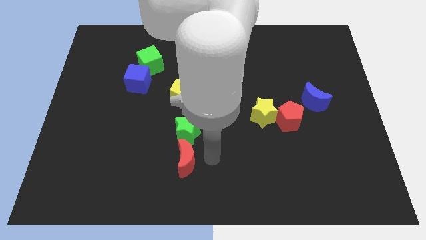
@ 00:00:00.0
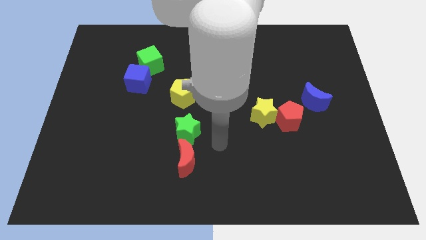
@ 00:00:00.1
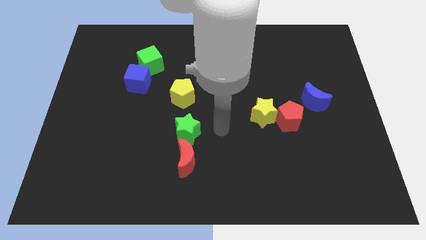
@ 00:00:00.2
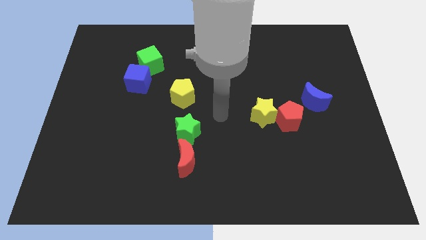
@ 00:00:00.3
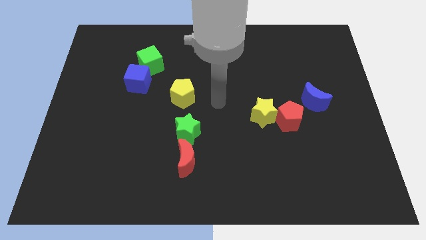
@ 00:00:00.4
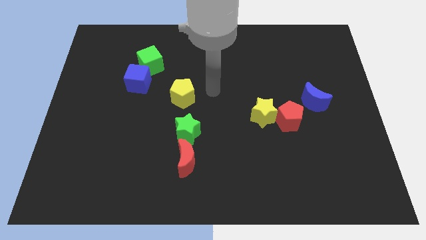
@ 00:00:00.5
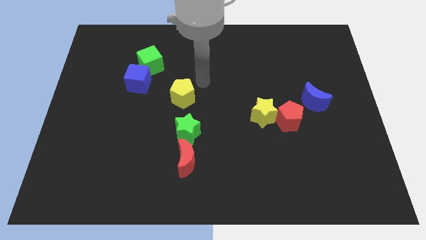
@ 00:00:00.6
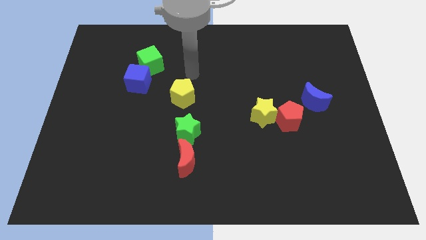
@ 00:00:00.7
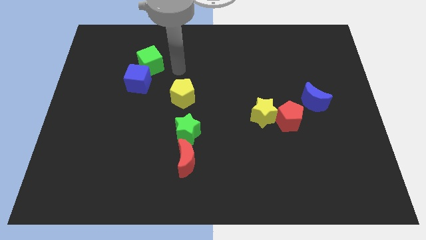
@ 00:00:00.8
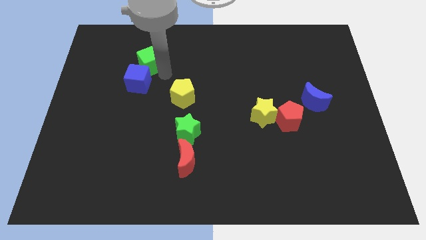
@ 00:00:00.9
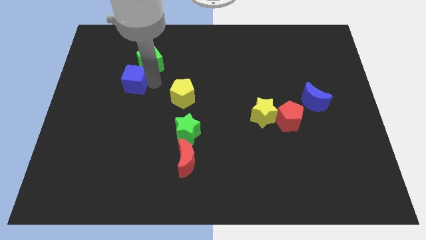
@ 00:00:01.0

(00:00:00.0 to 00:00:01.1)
move your arm to the right of the blue cube

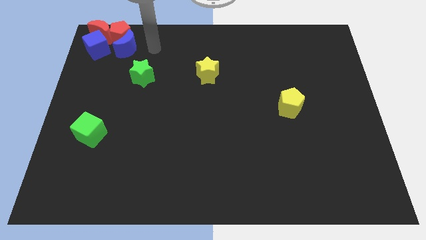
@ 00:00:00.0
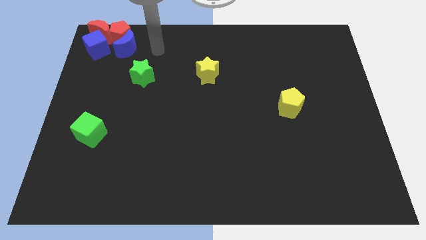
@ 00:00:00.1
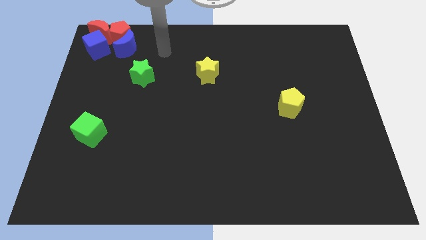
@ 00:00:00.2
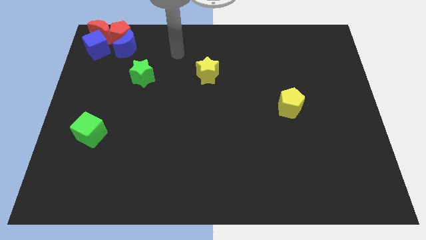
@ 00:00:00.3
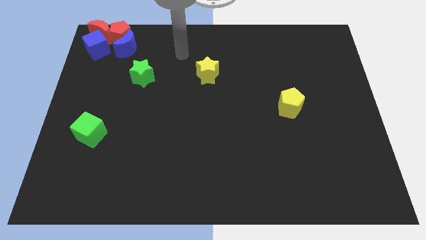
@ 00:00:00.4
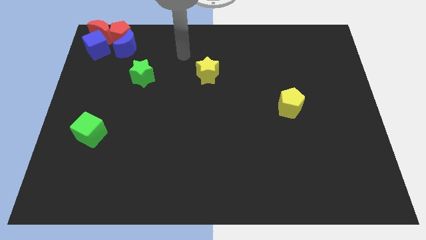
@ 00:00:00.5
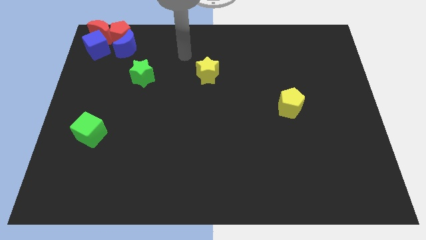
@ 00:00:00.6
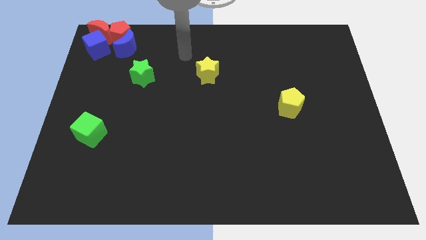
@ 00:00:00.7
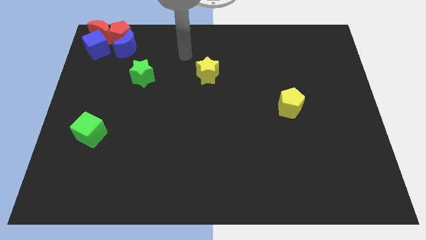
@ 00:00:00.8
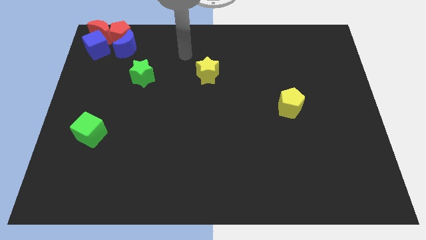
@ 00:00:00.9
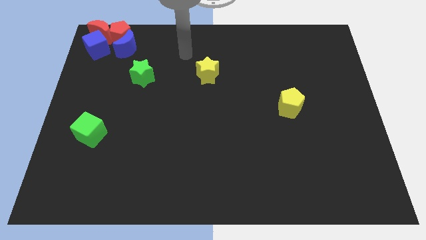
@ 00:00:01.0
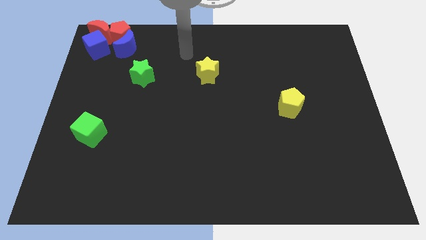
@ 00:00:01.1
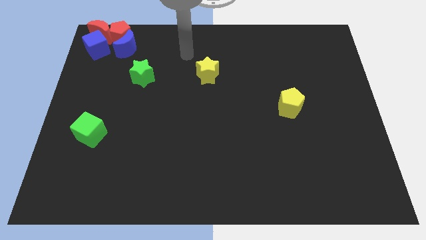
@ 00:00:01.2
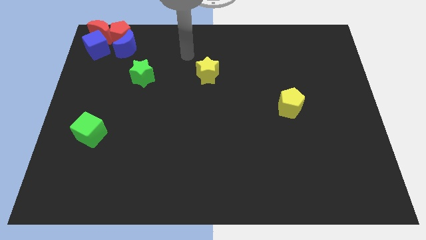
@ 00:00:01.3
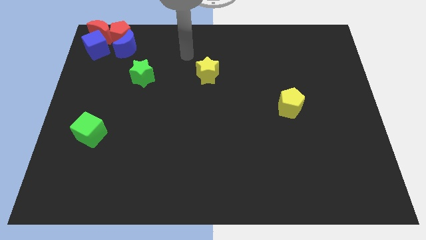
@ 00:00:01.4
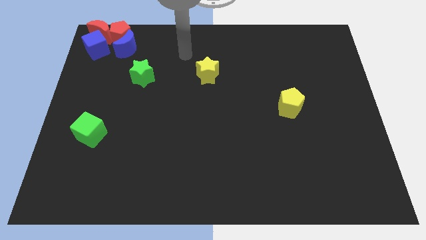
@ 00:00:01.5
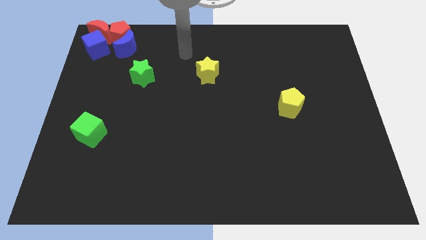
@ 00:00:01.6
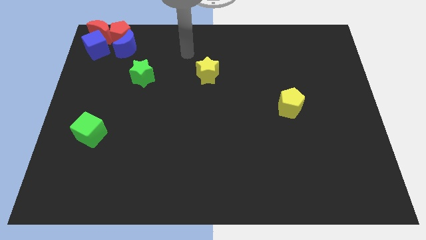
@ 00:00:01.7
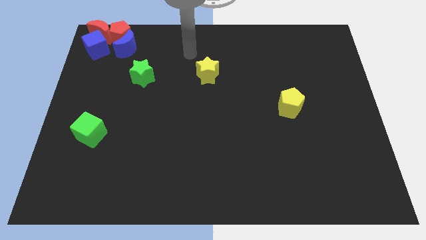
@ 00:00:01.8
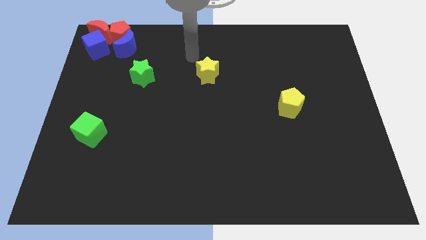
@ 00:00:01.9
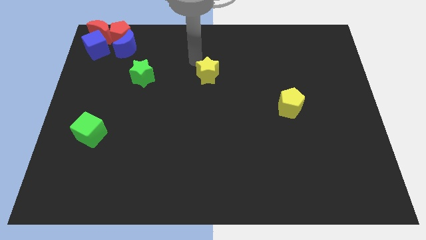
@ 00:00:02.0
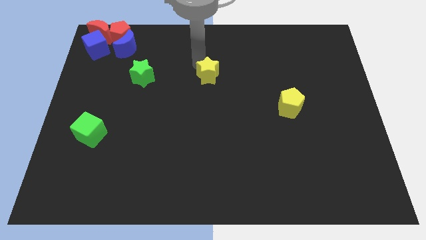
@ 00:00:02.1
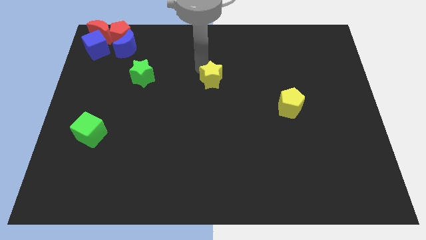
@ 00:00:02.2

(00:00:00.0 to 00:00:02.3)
tap the yellow star

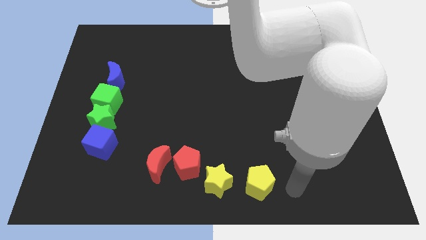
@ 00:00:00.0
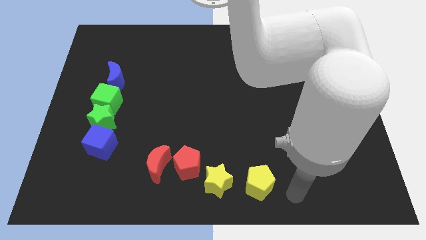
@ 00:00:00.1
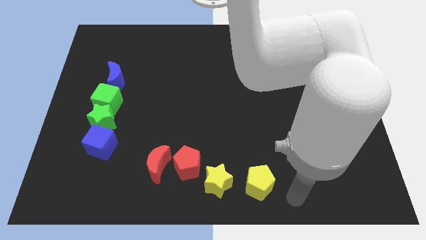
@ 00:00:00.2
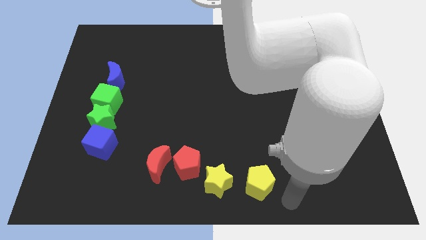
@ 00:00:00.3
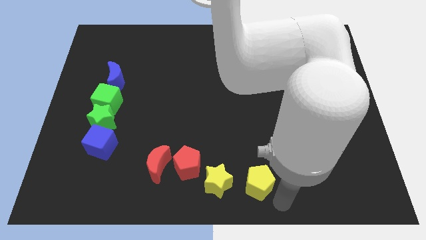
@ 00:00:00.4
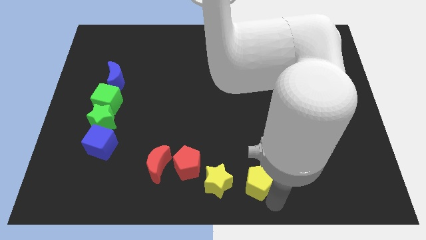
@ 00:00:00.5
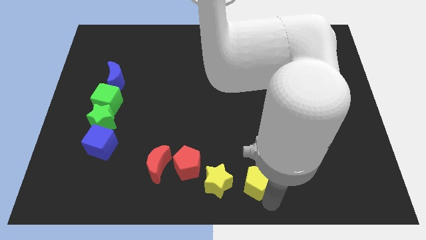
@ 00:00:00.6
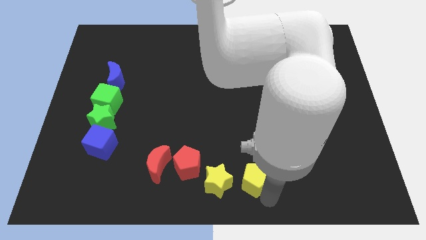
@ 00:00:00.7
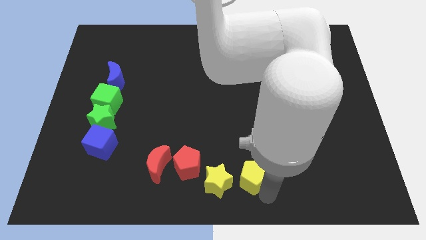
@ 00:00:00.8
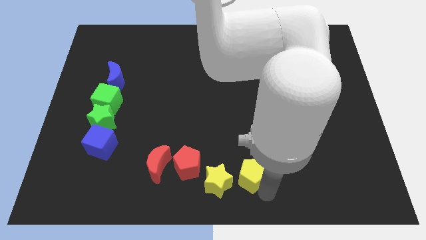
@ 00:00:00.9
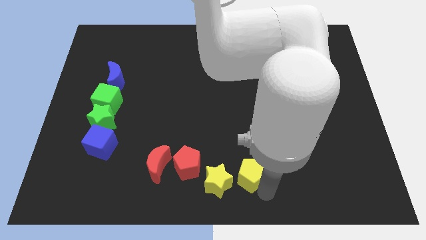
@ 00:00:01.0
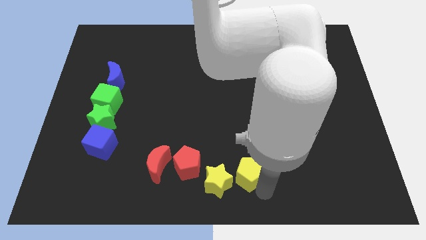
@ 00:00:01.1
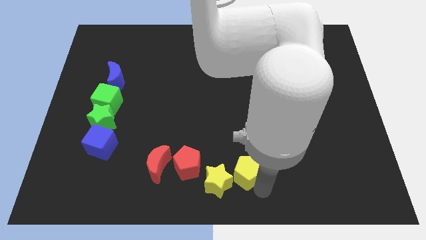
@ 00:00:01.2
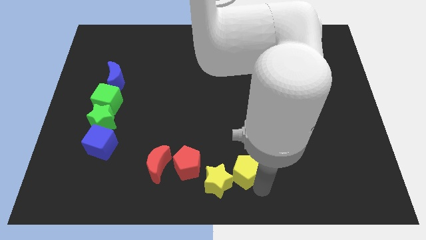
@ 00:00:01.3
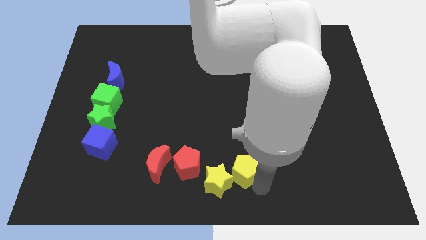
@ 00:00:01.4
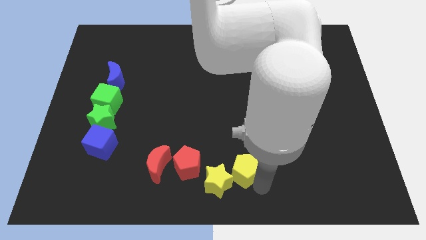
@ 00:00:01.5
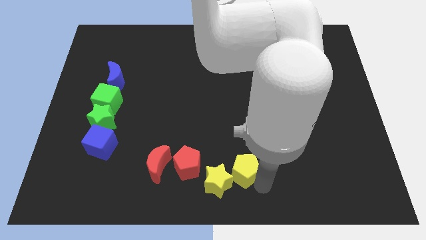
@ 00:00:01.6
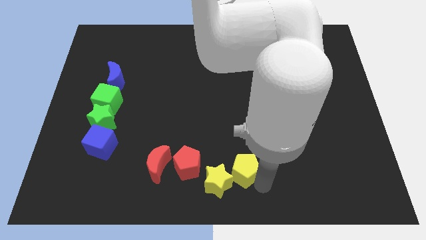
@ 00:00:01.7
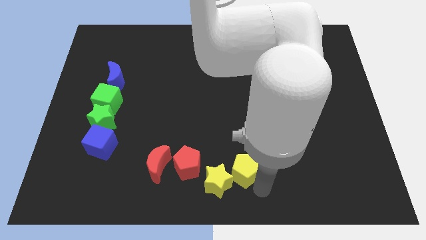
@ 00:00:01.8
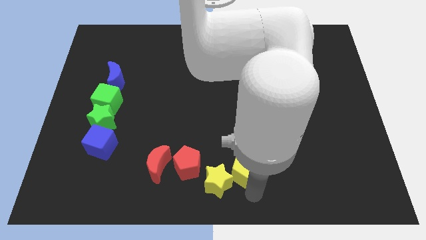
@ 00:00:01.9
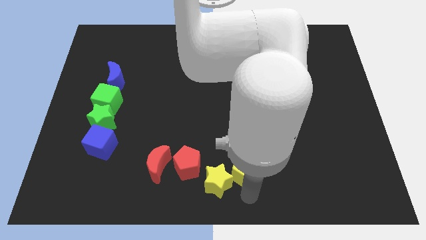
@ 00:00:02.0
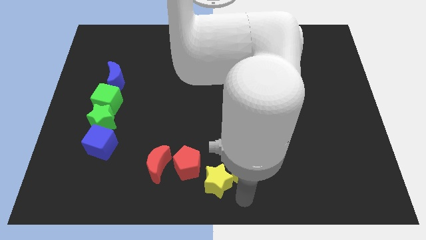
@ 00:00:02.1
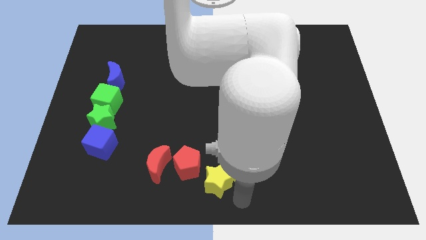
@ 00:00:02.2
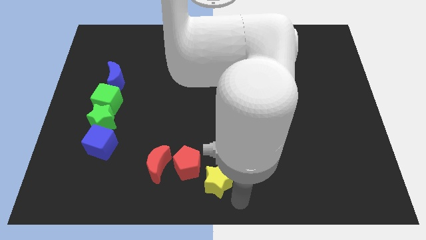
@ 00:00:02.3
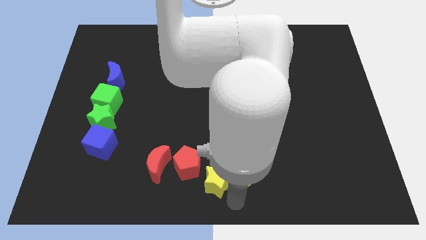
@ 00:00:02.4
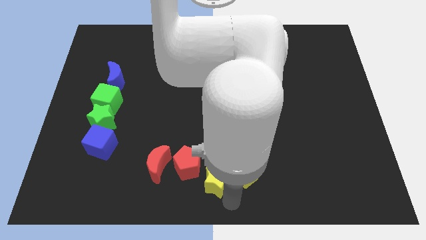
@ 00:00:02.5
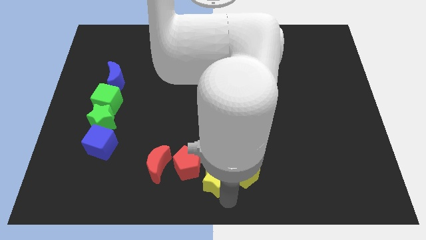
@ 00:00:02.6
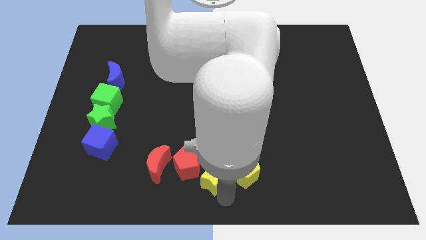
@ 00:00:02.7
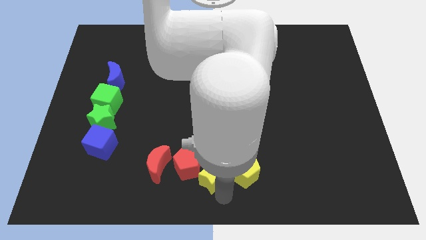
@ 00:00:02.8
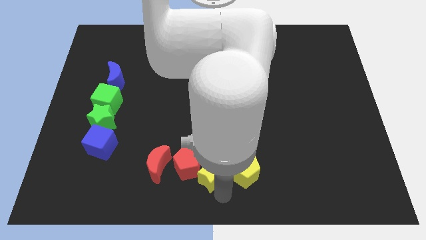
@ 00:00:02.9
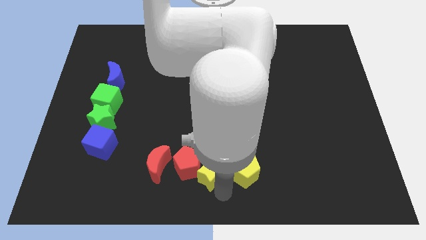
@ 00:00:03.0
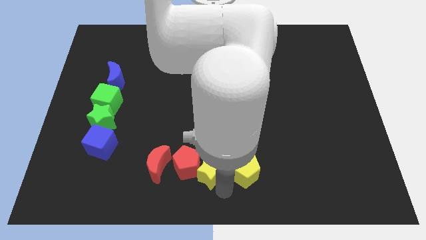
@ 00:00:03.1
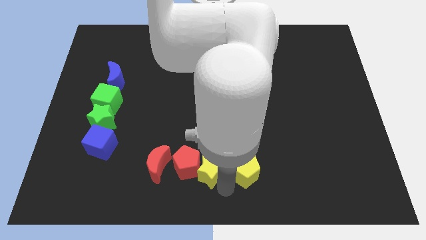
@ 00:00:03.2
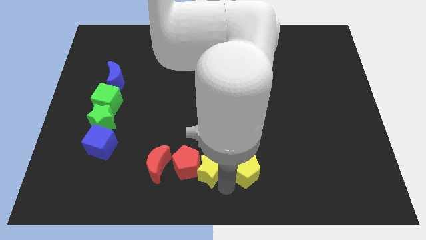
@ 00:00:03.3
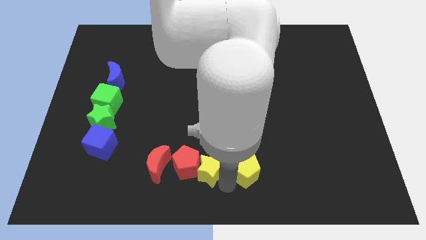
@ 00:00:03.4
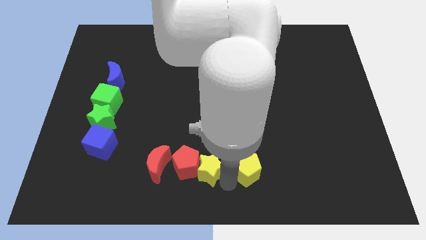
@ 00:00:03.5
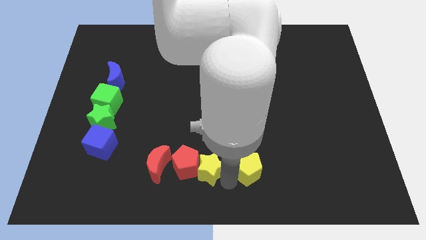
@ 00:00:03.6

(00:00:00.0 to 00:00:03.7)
place your hand in between the yellow blocks

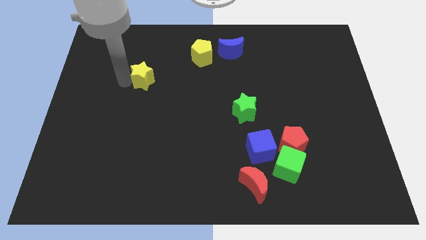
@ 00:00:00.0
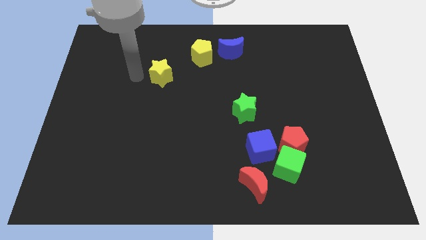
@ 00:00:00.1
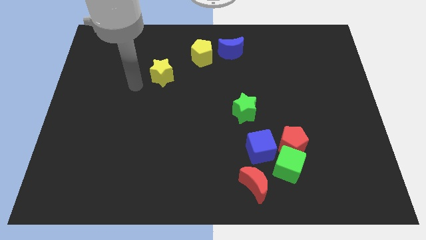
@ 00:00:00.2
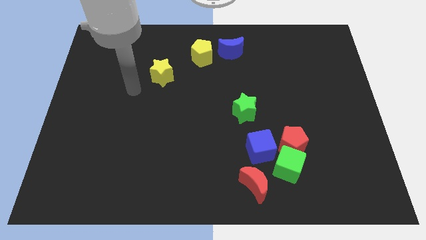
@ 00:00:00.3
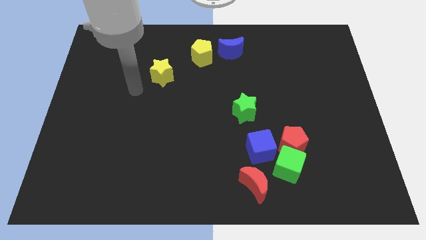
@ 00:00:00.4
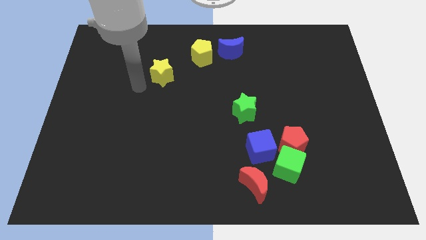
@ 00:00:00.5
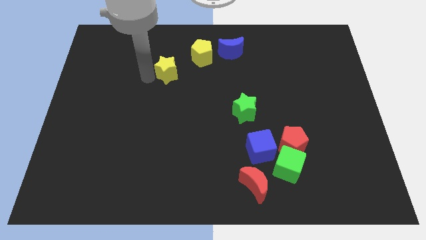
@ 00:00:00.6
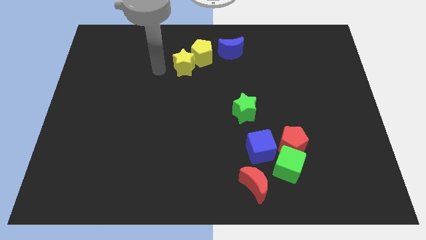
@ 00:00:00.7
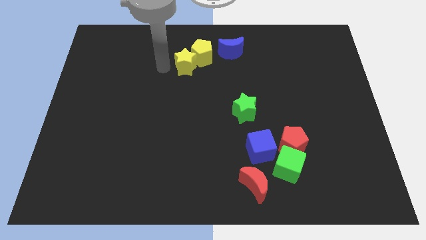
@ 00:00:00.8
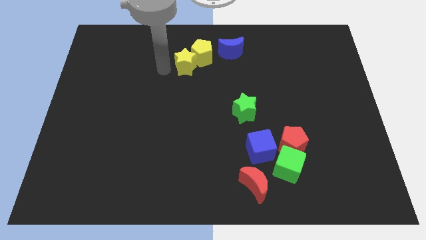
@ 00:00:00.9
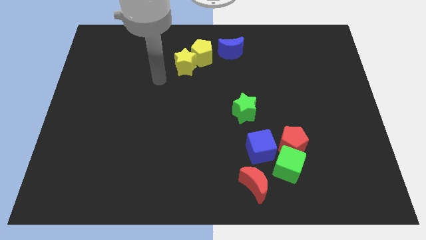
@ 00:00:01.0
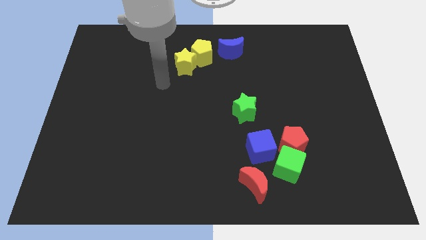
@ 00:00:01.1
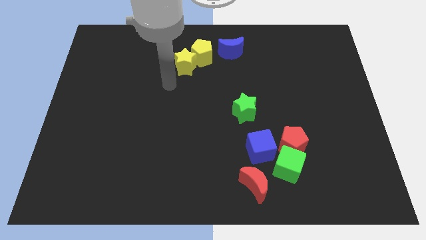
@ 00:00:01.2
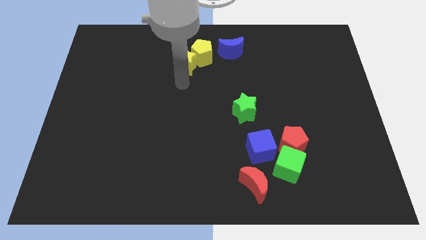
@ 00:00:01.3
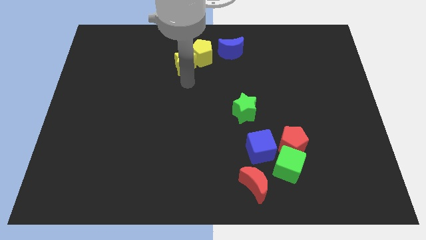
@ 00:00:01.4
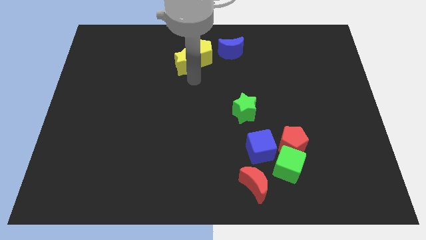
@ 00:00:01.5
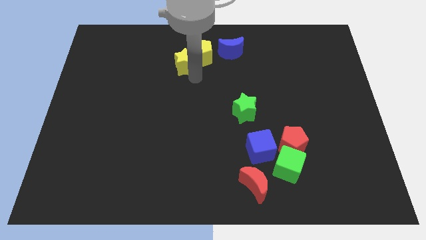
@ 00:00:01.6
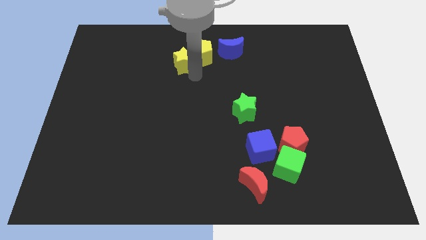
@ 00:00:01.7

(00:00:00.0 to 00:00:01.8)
push the yellow star into the yellow pentagon
